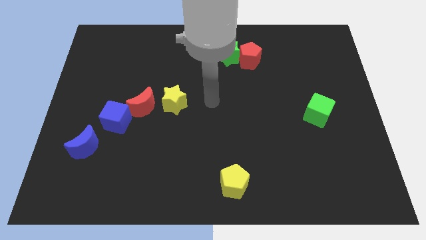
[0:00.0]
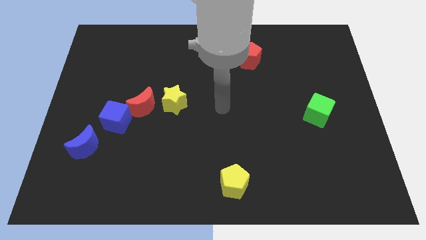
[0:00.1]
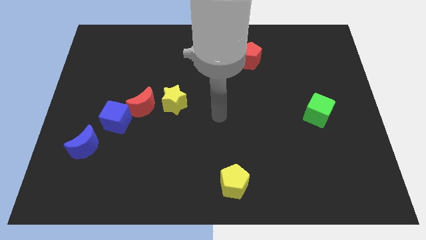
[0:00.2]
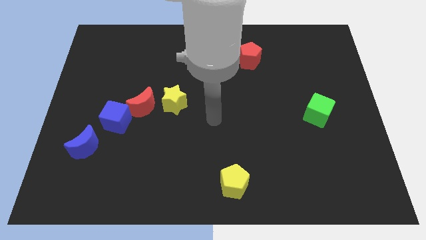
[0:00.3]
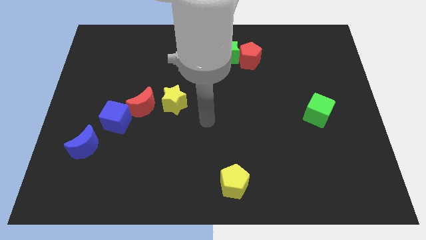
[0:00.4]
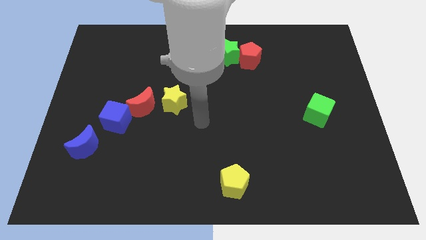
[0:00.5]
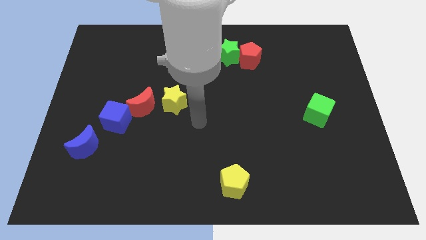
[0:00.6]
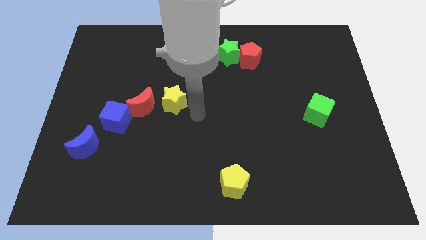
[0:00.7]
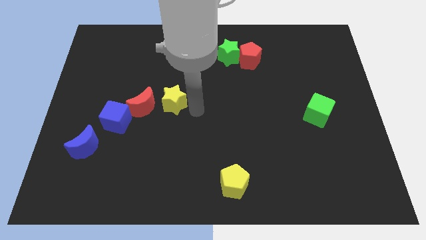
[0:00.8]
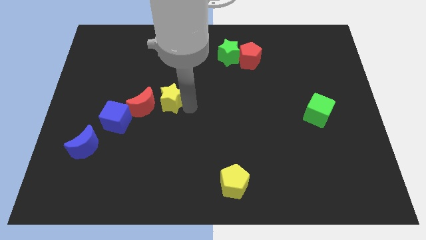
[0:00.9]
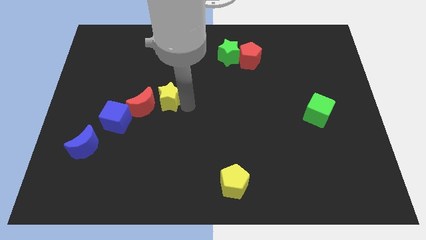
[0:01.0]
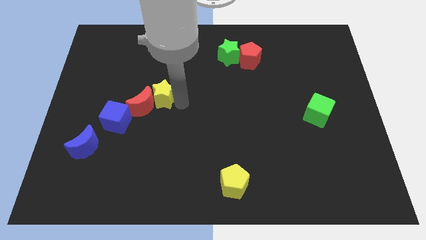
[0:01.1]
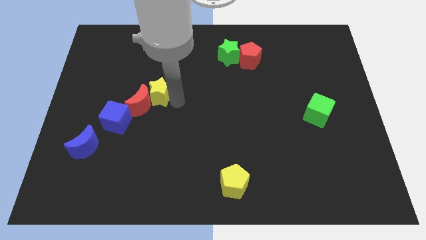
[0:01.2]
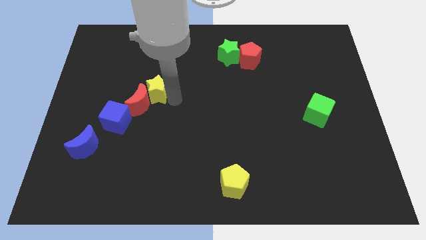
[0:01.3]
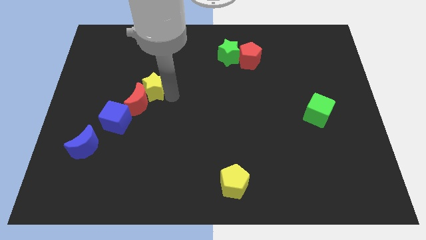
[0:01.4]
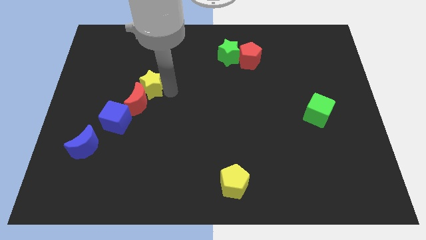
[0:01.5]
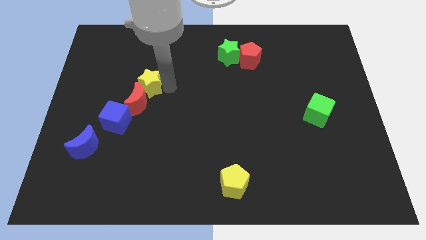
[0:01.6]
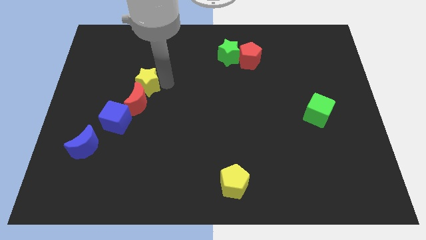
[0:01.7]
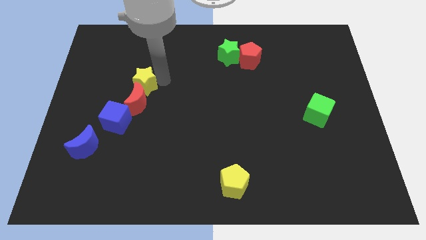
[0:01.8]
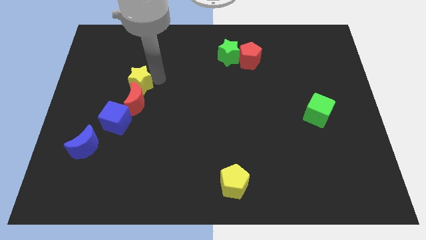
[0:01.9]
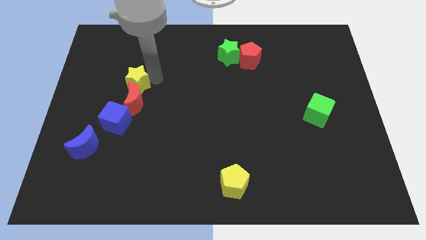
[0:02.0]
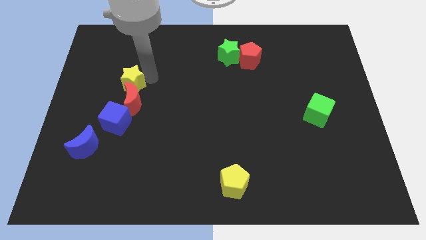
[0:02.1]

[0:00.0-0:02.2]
place the yellow star above the red pentagon

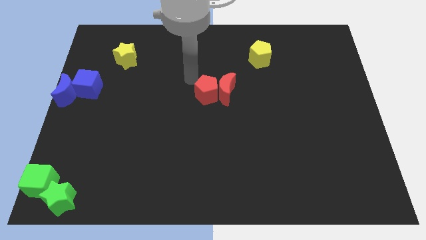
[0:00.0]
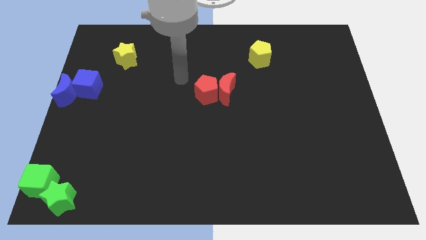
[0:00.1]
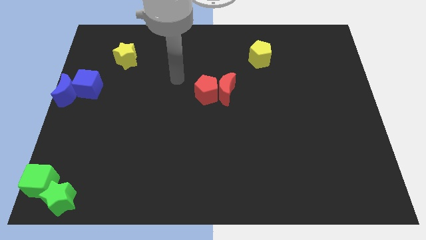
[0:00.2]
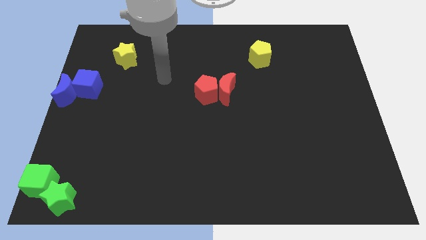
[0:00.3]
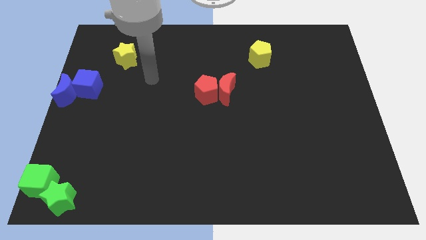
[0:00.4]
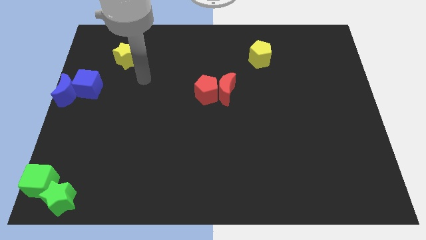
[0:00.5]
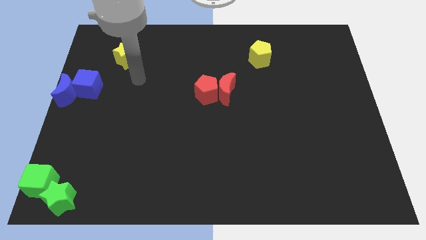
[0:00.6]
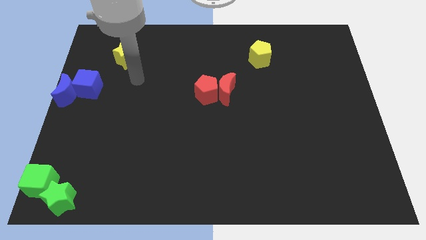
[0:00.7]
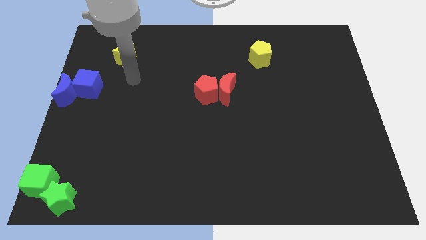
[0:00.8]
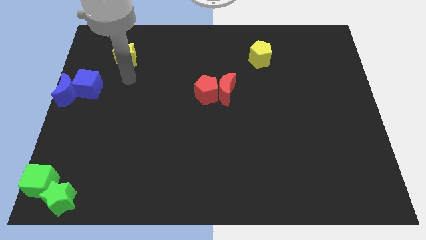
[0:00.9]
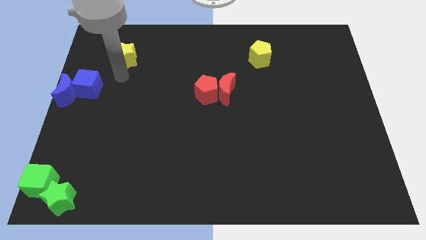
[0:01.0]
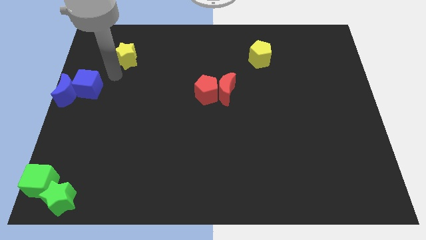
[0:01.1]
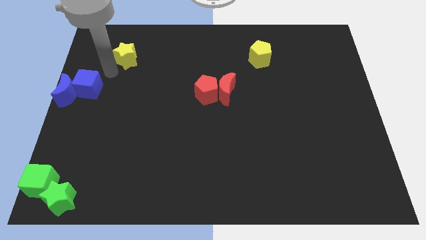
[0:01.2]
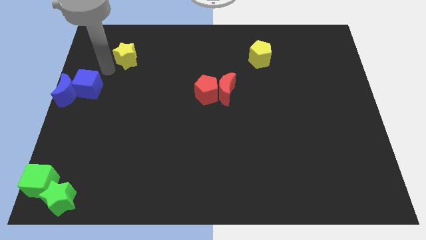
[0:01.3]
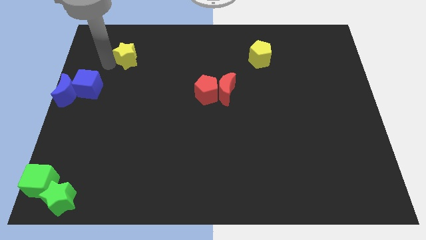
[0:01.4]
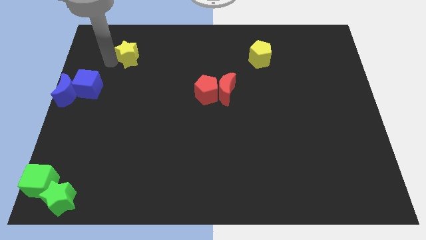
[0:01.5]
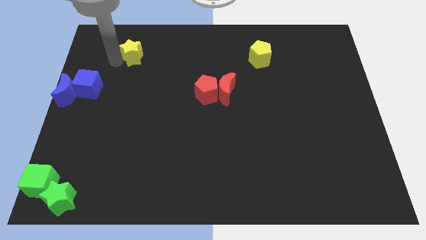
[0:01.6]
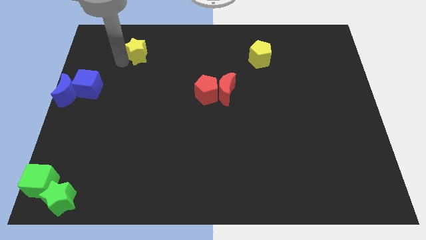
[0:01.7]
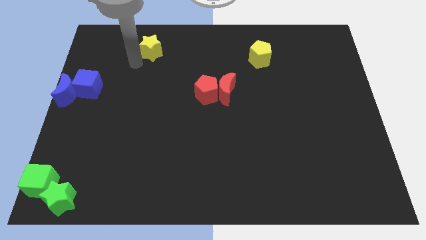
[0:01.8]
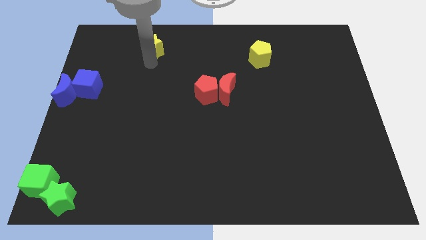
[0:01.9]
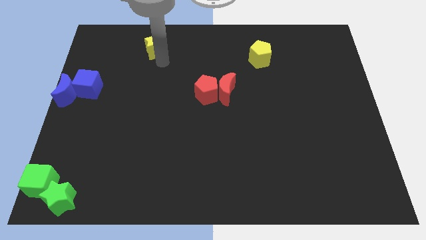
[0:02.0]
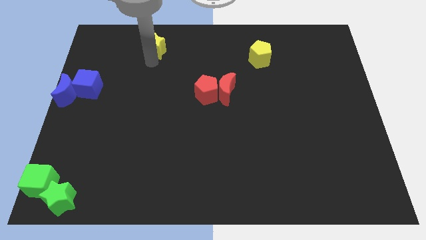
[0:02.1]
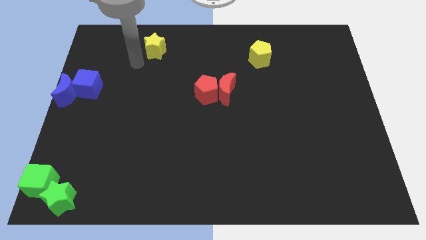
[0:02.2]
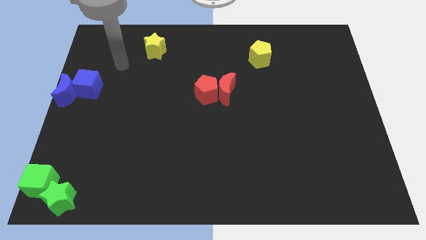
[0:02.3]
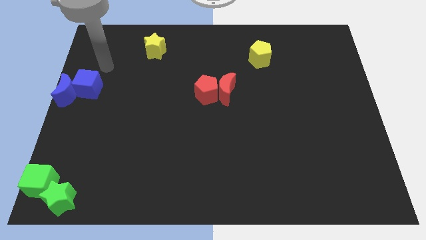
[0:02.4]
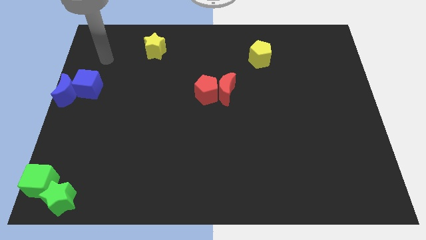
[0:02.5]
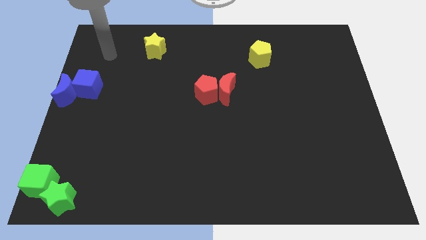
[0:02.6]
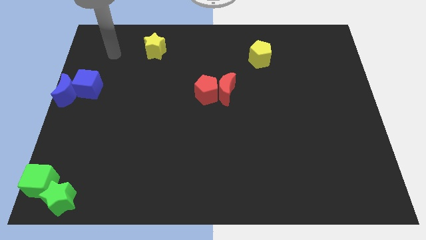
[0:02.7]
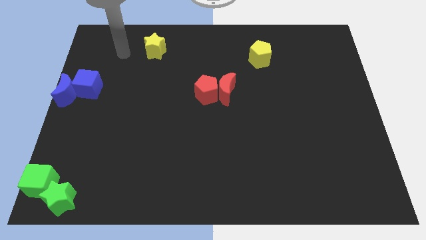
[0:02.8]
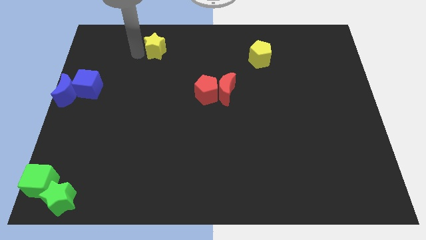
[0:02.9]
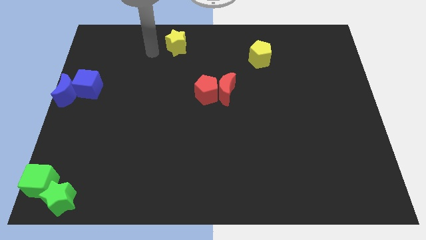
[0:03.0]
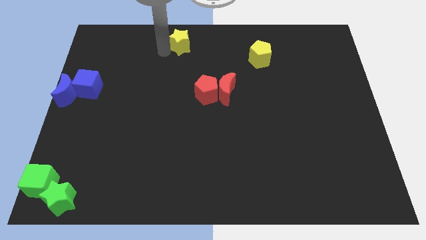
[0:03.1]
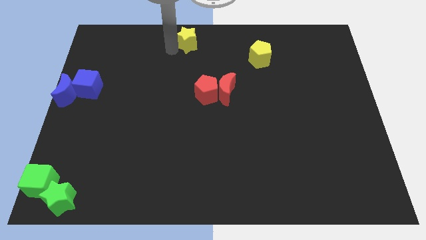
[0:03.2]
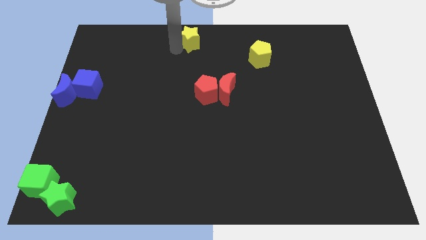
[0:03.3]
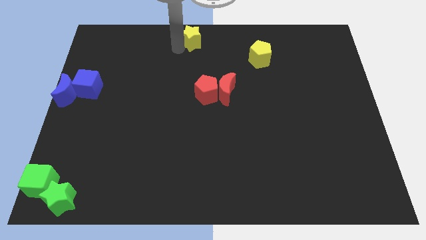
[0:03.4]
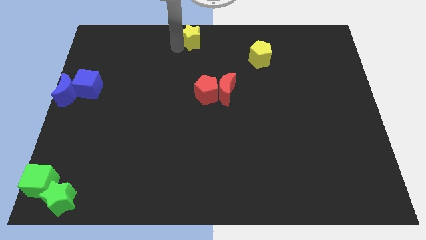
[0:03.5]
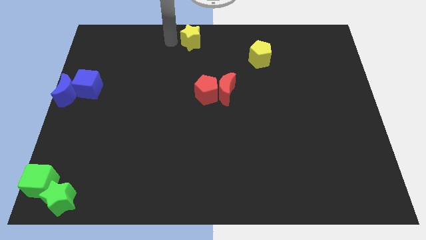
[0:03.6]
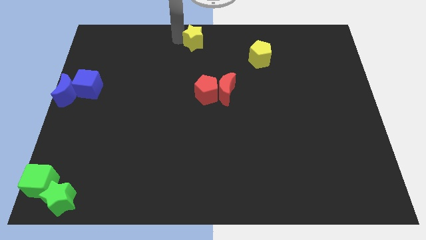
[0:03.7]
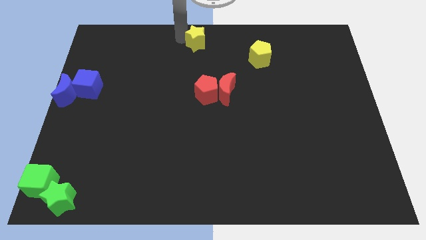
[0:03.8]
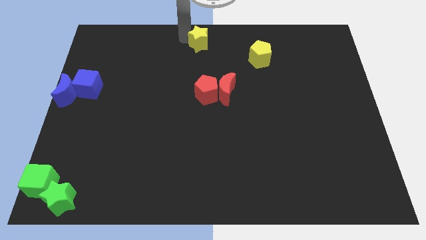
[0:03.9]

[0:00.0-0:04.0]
push the yellow star to top center of the board

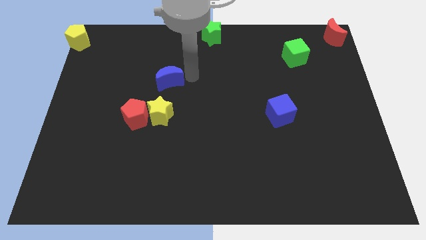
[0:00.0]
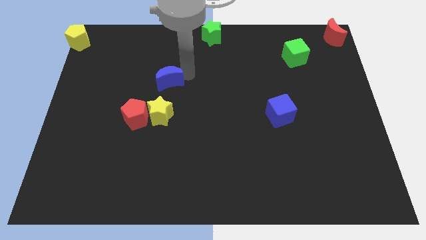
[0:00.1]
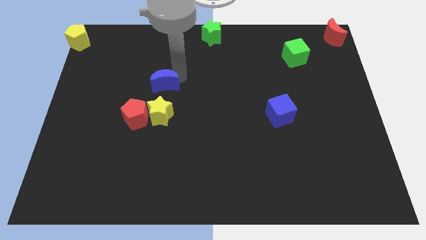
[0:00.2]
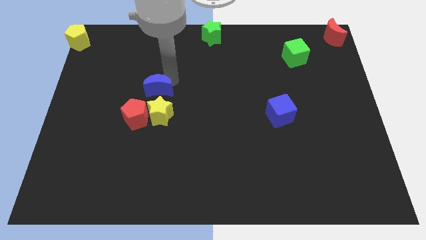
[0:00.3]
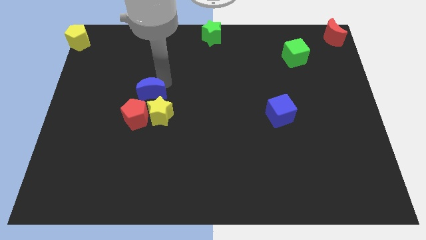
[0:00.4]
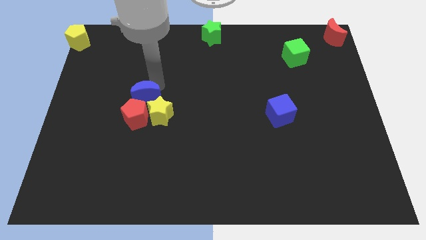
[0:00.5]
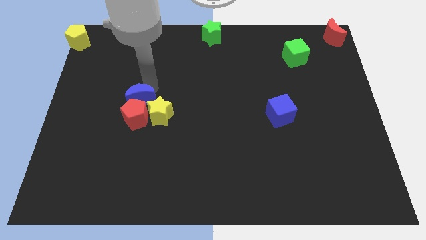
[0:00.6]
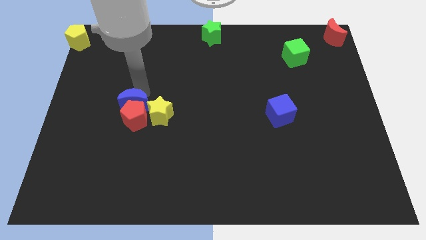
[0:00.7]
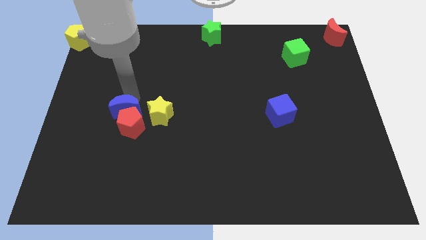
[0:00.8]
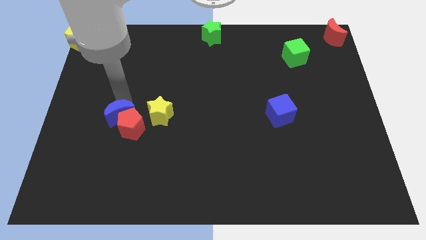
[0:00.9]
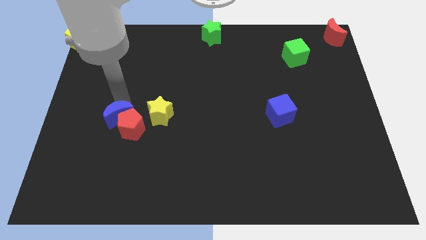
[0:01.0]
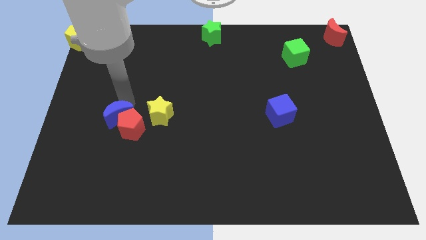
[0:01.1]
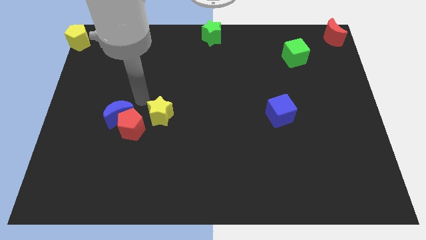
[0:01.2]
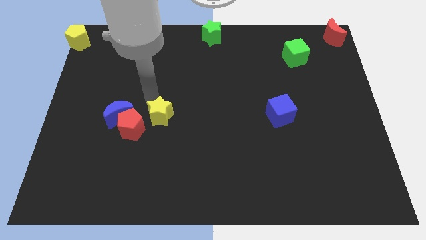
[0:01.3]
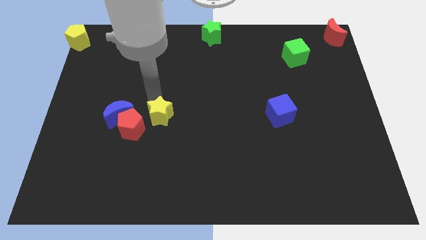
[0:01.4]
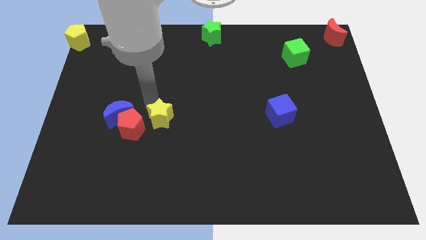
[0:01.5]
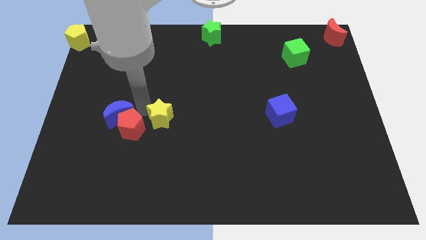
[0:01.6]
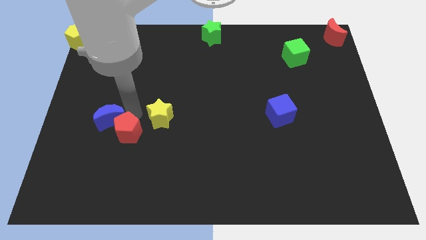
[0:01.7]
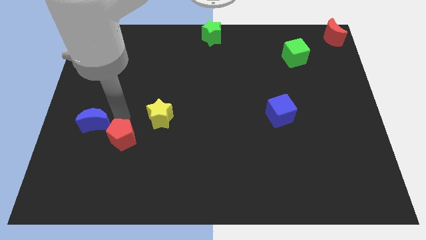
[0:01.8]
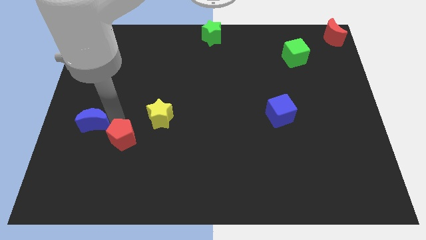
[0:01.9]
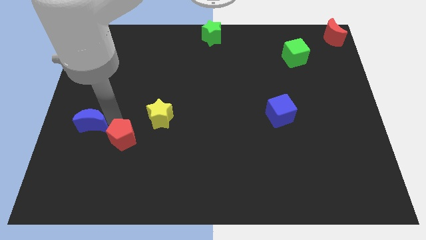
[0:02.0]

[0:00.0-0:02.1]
push blue crescent and red pentagon away from yellow star

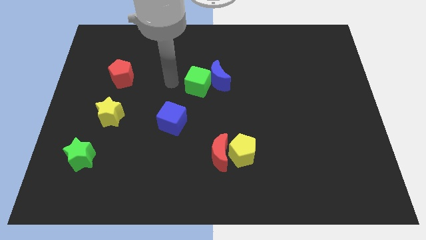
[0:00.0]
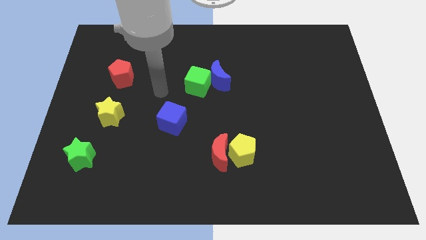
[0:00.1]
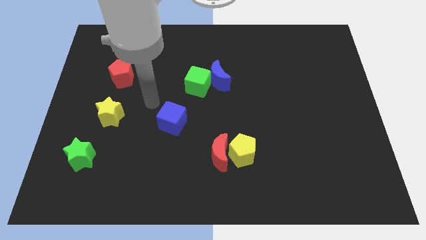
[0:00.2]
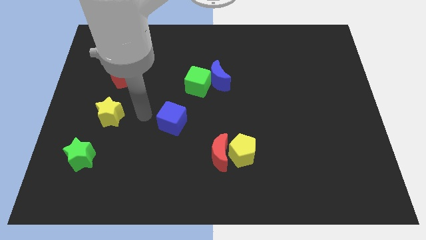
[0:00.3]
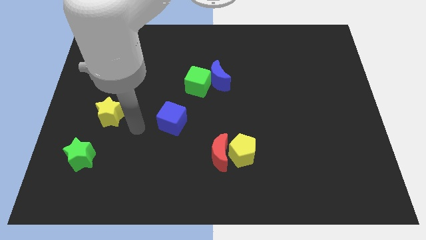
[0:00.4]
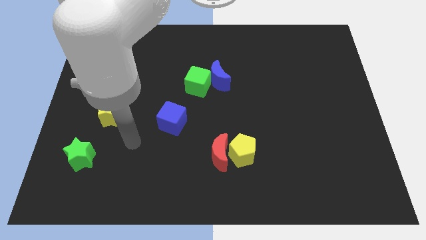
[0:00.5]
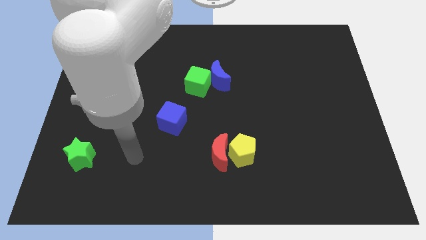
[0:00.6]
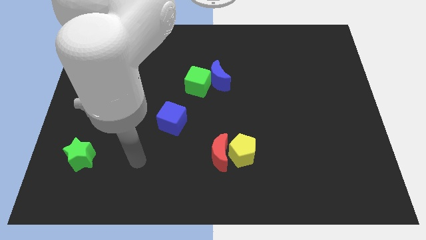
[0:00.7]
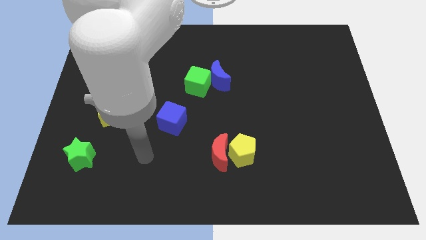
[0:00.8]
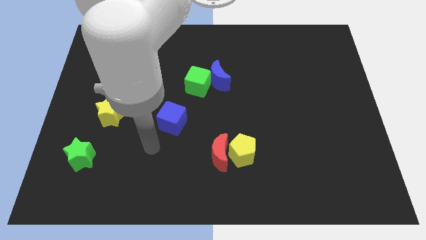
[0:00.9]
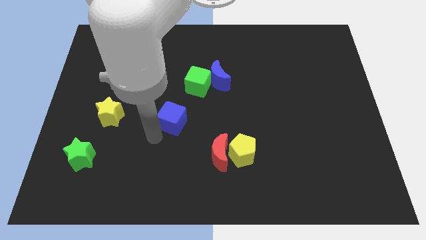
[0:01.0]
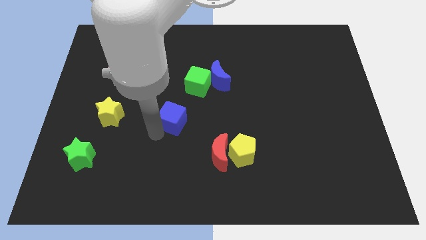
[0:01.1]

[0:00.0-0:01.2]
point the arm below the blue cube
